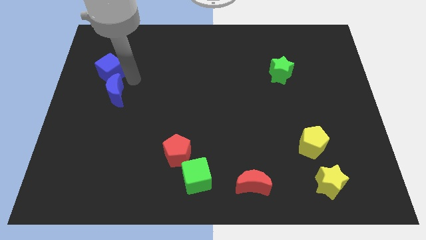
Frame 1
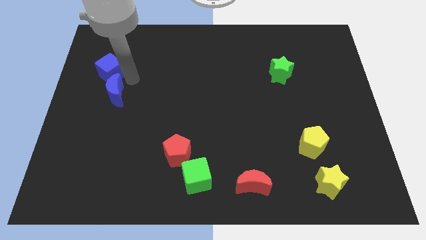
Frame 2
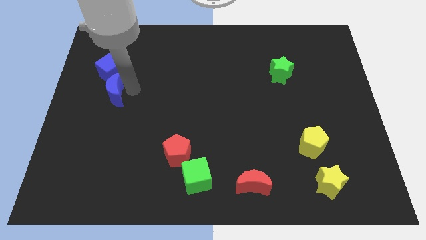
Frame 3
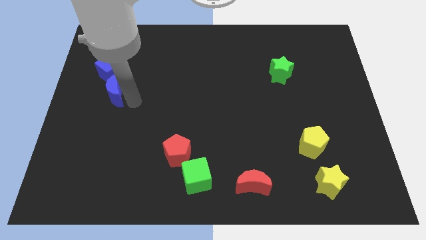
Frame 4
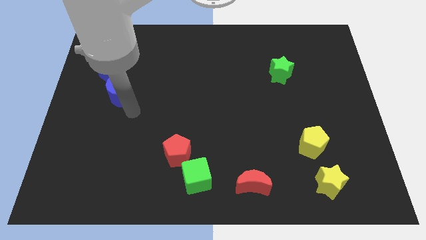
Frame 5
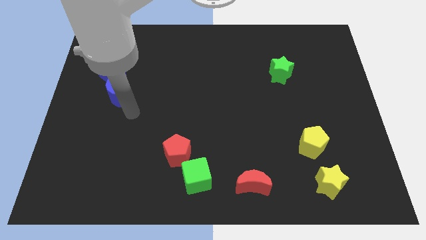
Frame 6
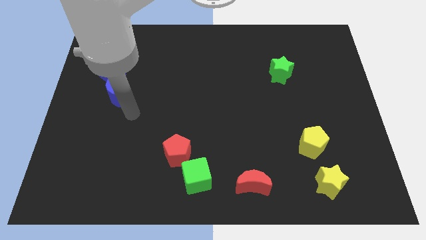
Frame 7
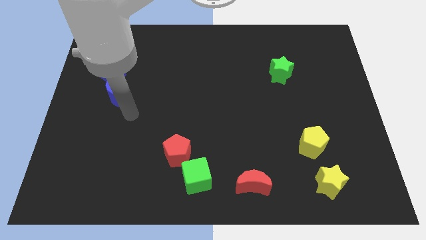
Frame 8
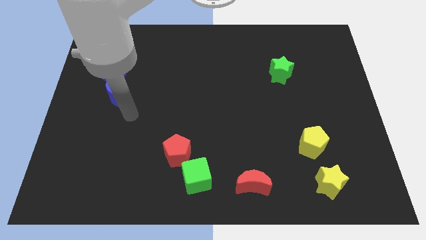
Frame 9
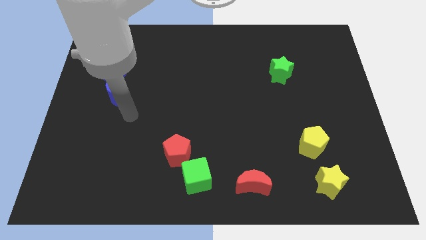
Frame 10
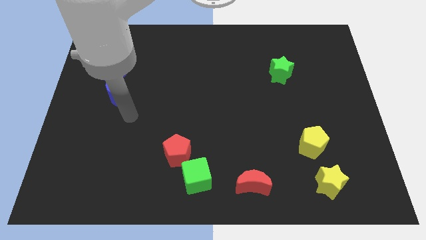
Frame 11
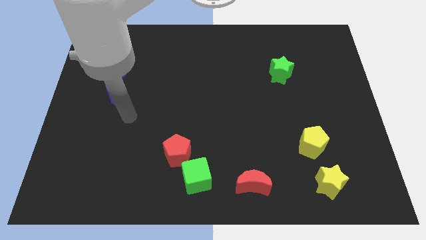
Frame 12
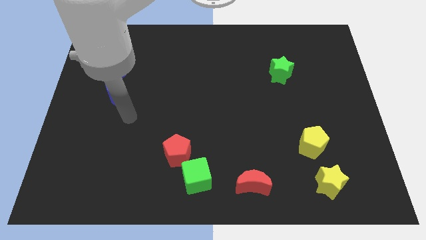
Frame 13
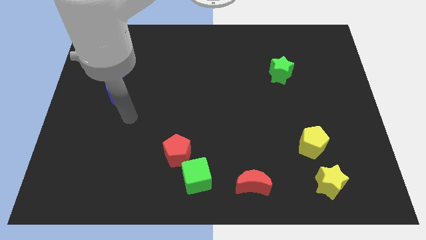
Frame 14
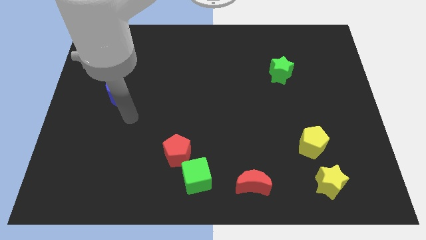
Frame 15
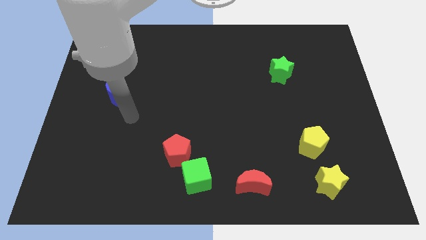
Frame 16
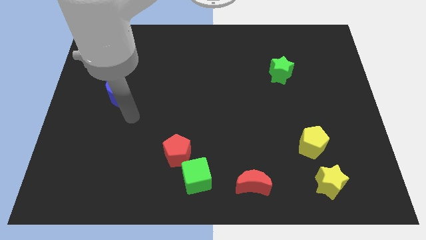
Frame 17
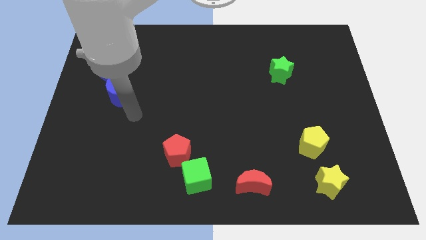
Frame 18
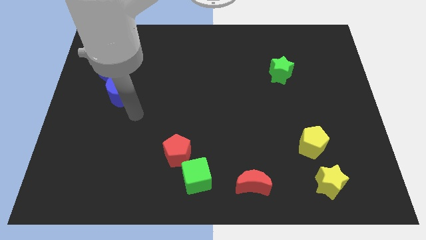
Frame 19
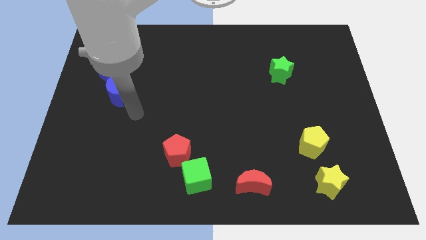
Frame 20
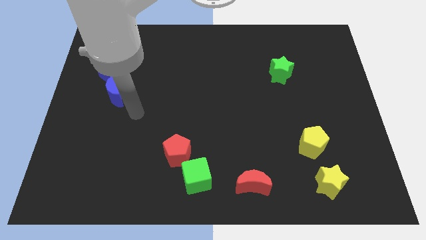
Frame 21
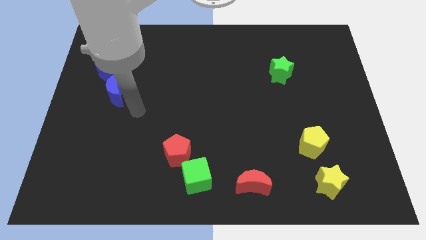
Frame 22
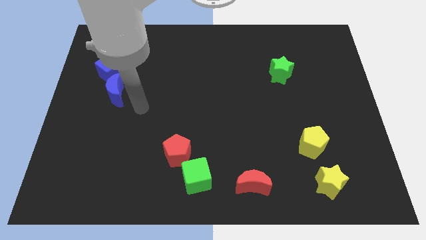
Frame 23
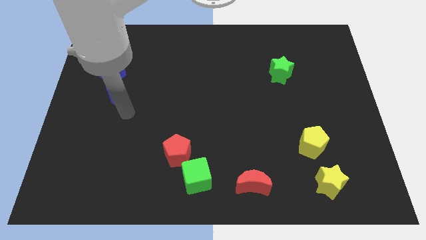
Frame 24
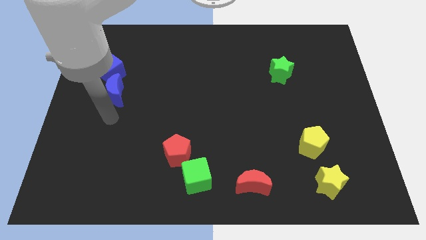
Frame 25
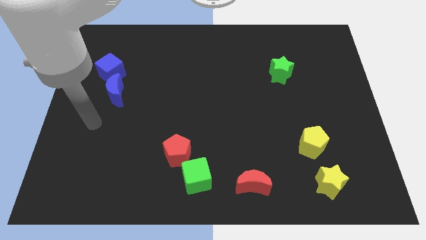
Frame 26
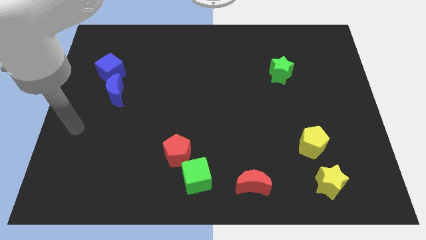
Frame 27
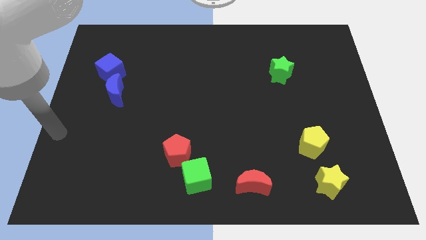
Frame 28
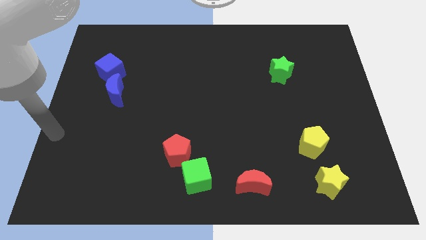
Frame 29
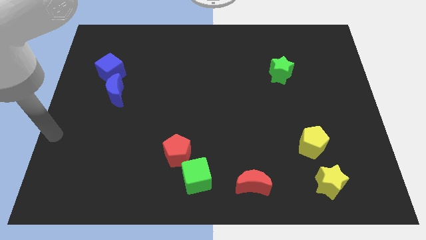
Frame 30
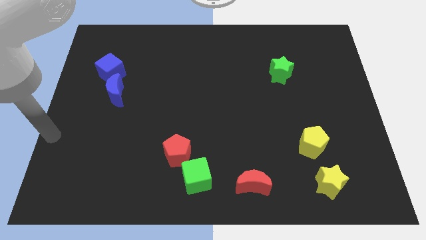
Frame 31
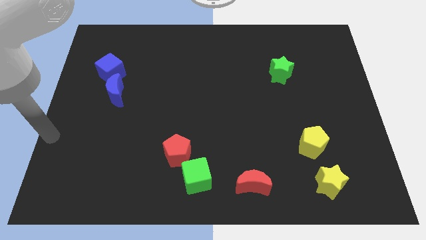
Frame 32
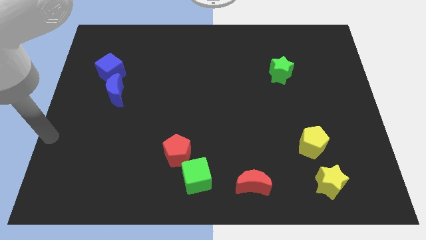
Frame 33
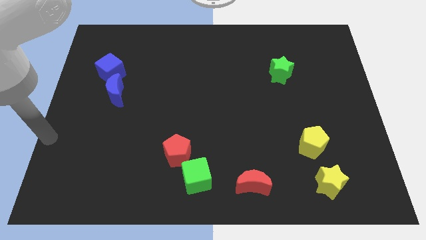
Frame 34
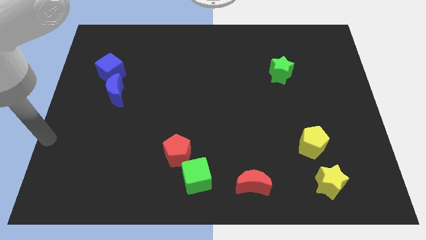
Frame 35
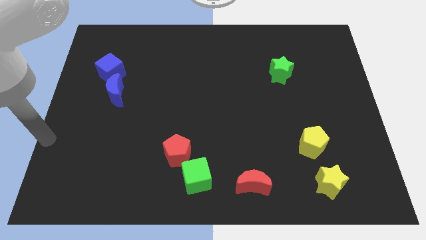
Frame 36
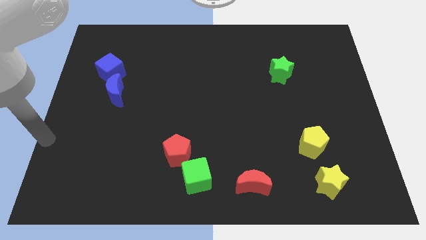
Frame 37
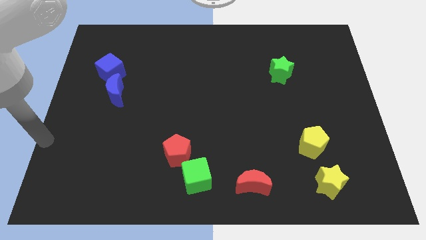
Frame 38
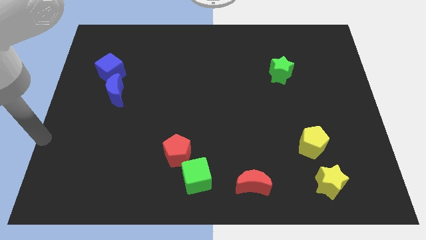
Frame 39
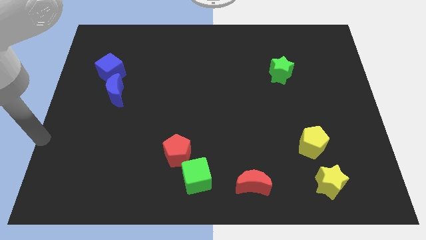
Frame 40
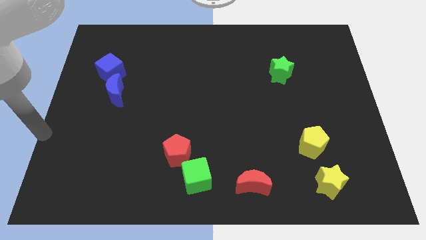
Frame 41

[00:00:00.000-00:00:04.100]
place the arm at the left side of the board

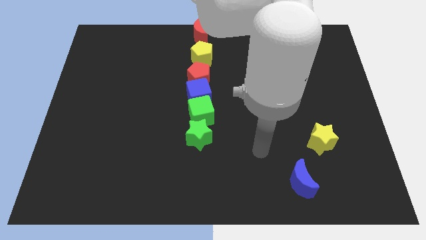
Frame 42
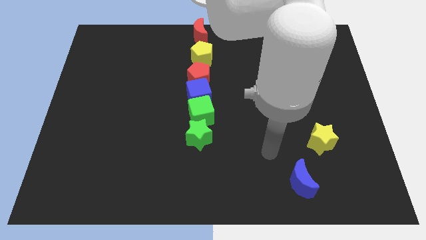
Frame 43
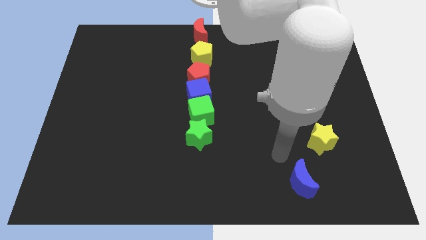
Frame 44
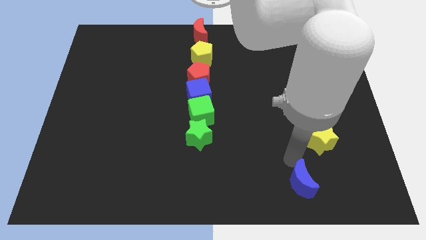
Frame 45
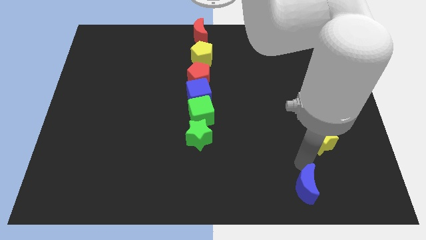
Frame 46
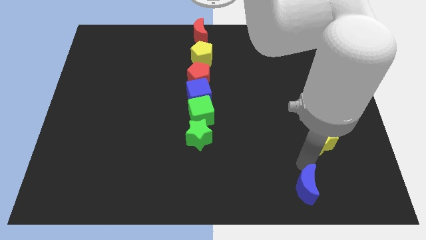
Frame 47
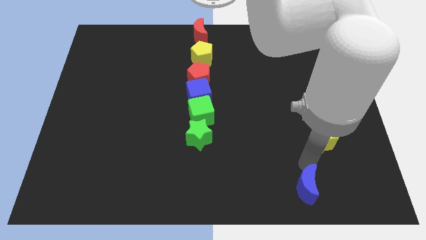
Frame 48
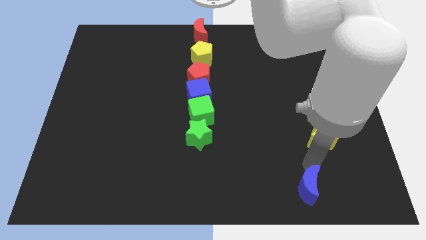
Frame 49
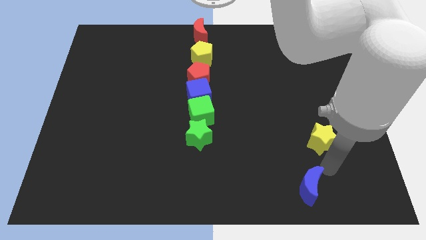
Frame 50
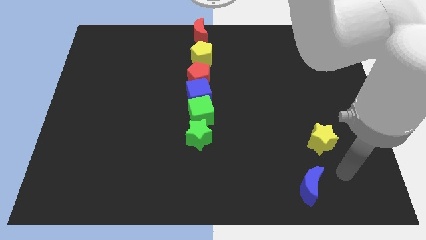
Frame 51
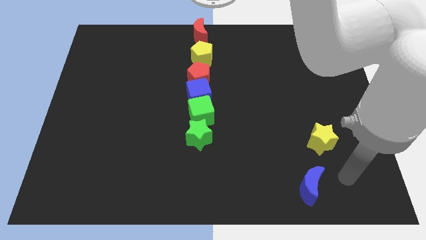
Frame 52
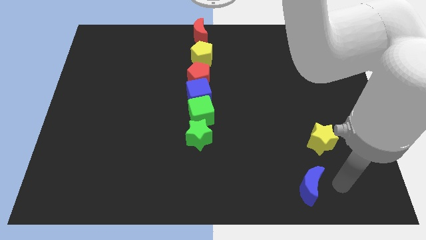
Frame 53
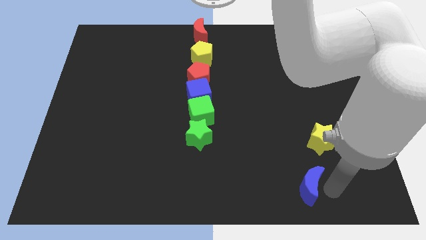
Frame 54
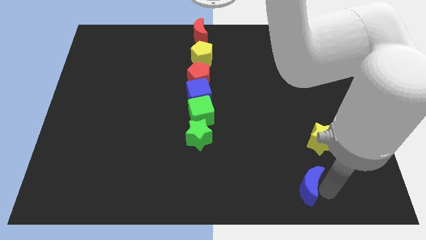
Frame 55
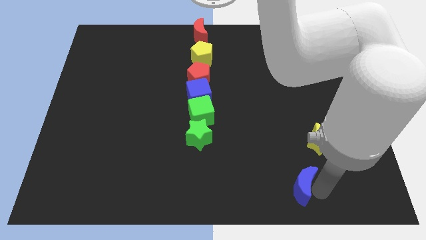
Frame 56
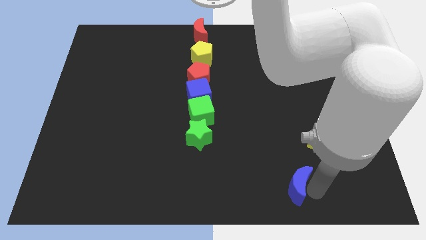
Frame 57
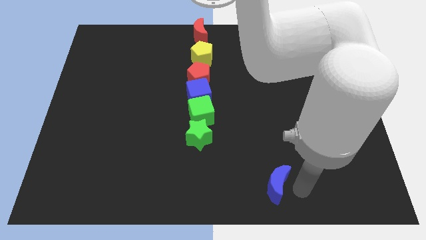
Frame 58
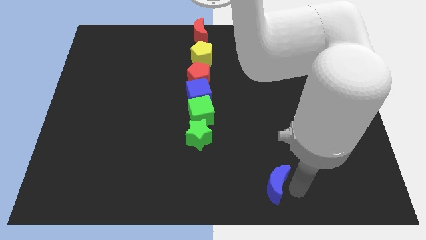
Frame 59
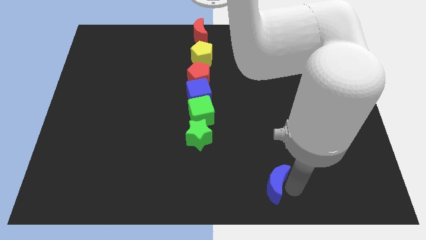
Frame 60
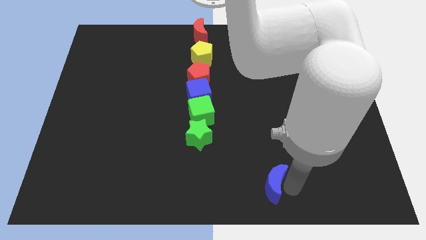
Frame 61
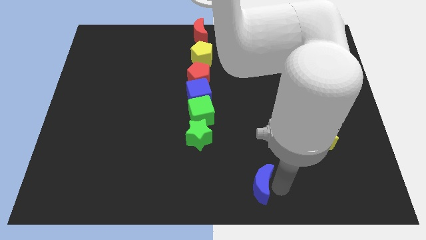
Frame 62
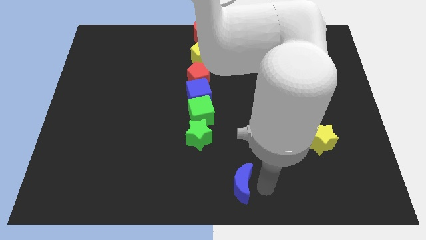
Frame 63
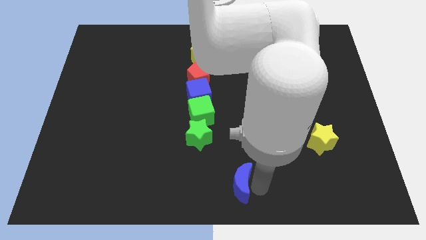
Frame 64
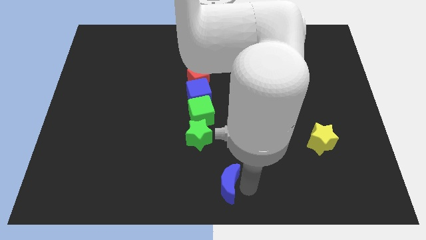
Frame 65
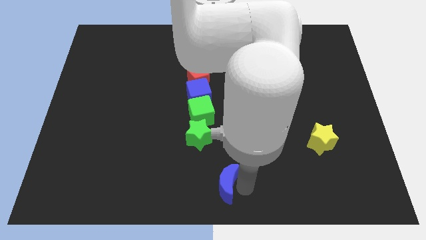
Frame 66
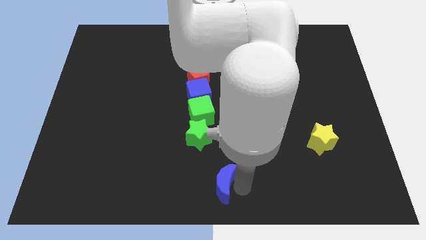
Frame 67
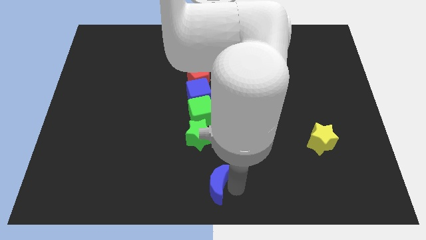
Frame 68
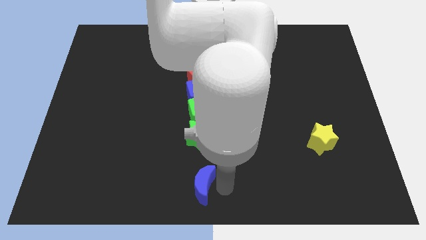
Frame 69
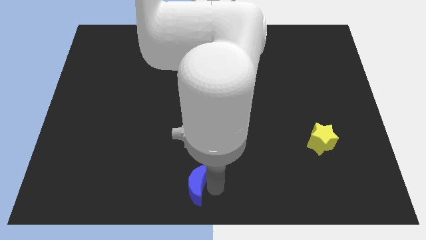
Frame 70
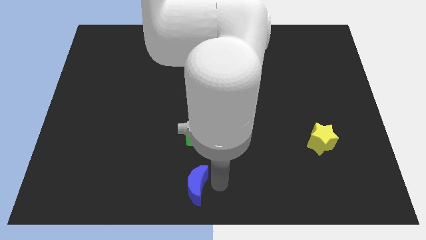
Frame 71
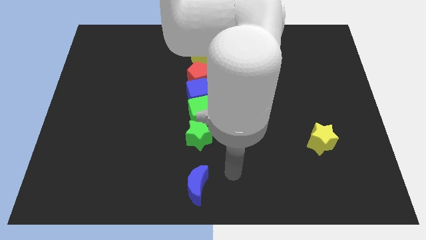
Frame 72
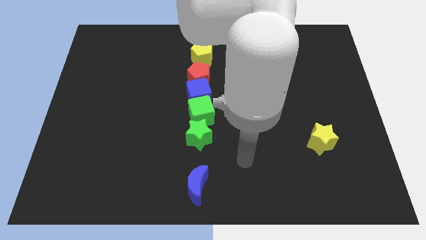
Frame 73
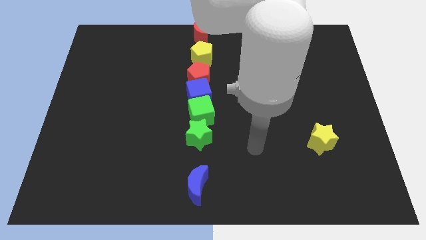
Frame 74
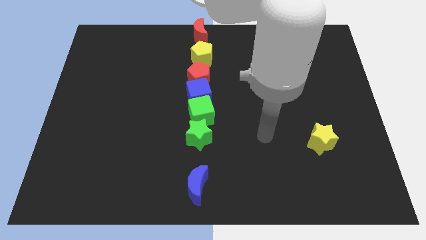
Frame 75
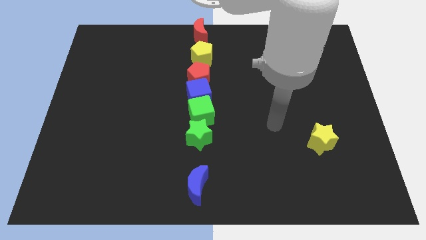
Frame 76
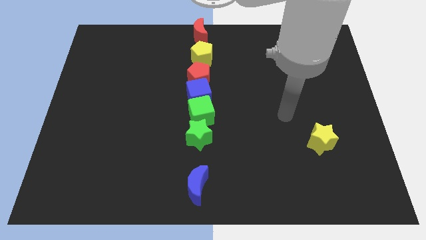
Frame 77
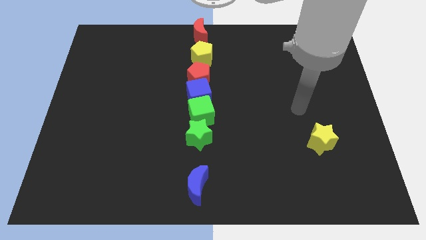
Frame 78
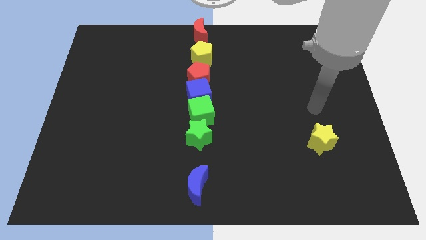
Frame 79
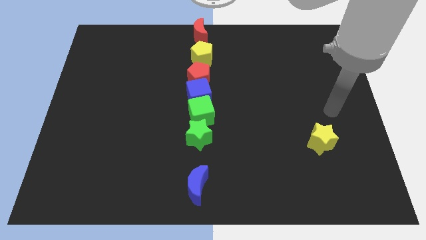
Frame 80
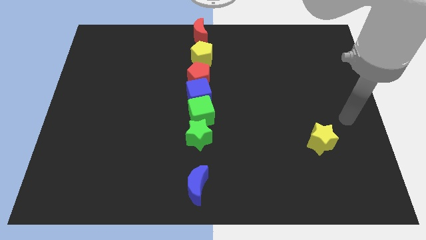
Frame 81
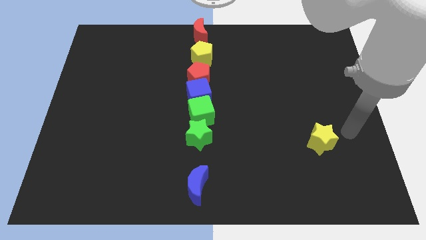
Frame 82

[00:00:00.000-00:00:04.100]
put the blue crescent at the bottom center of the board

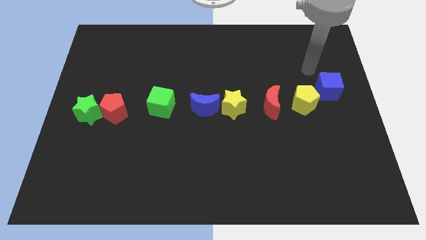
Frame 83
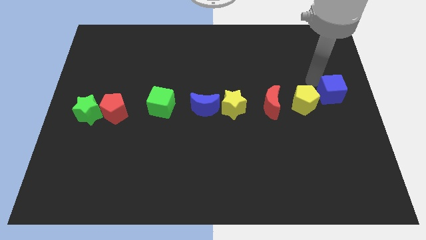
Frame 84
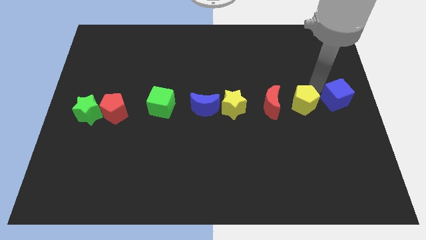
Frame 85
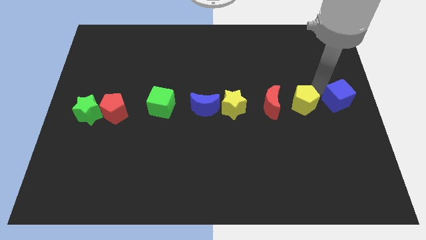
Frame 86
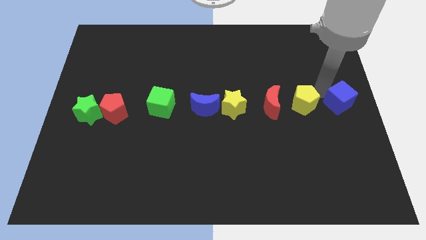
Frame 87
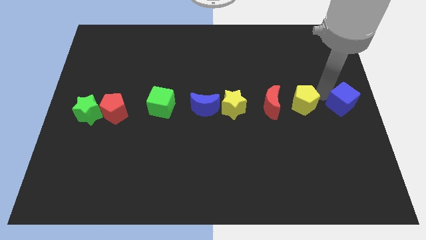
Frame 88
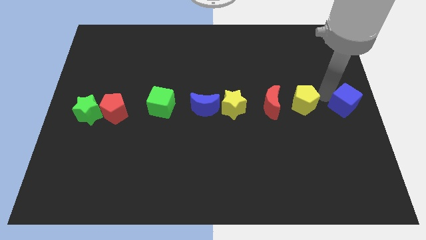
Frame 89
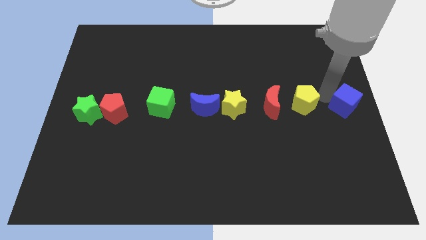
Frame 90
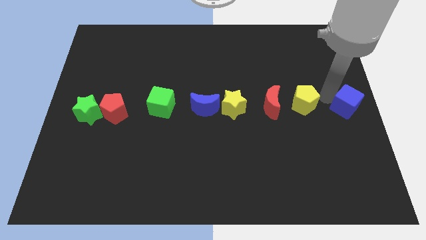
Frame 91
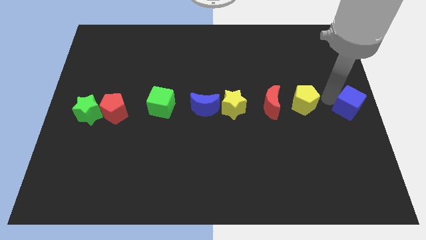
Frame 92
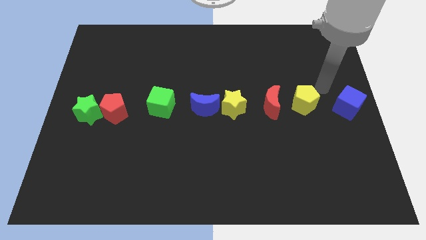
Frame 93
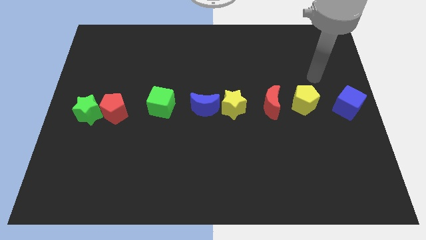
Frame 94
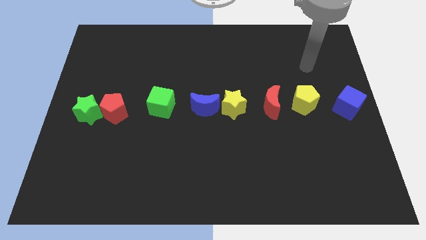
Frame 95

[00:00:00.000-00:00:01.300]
put the blue cube at the centre right of the board
